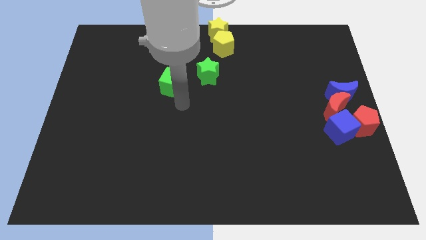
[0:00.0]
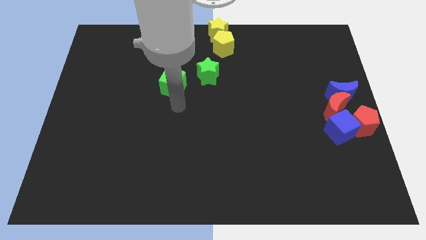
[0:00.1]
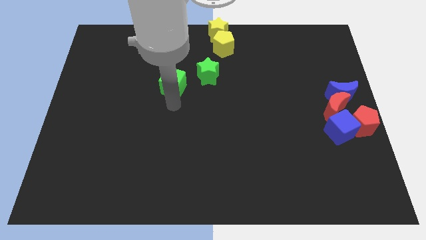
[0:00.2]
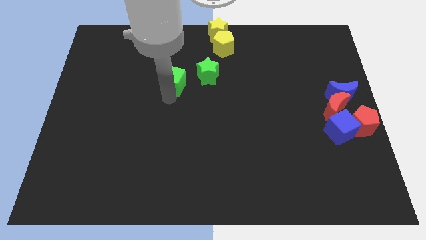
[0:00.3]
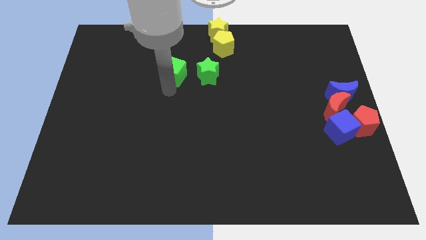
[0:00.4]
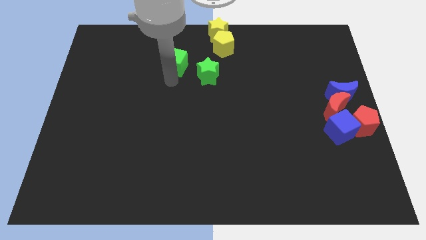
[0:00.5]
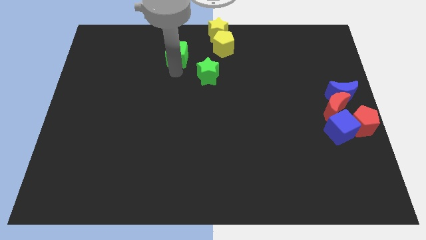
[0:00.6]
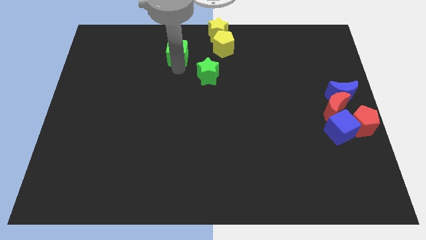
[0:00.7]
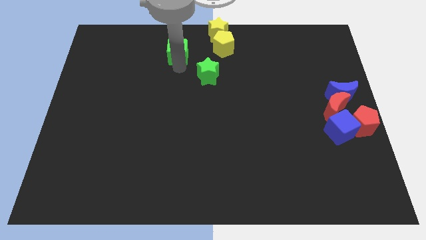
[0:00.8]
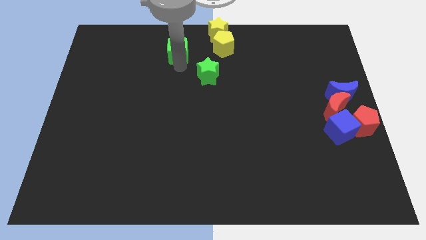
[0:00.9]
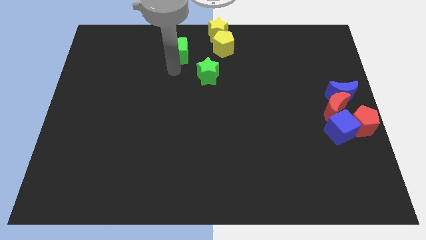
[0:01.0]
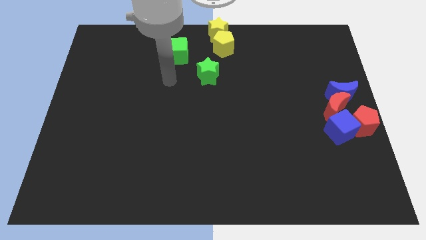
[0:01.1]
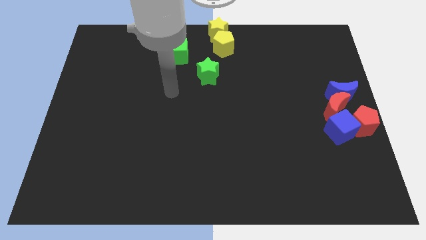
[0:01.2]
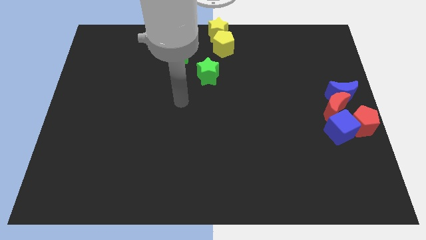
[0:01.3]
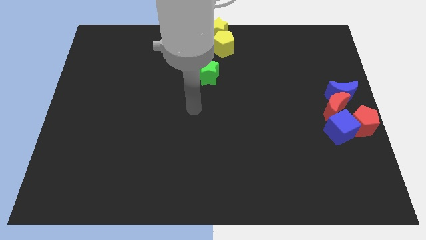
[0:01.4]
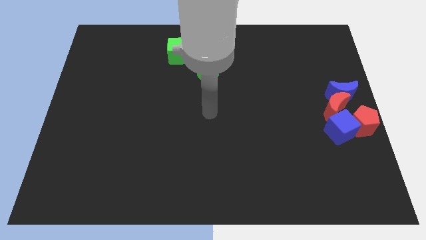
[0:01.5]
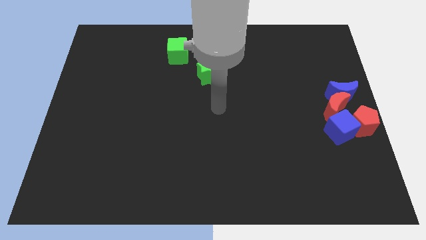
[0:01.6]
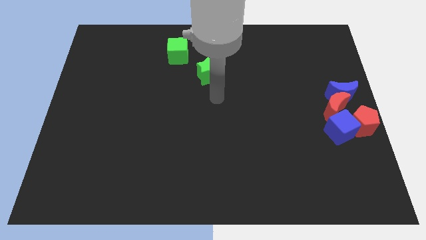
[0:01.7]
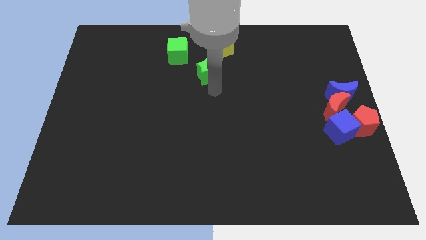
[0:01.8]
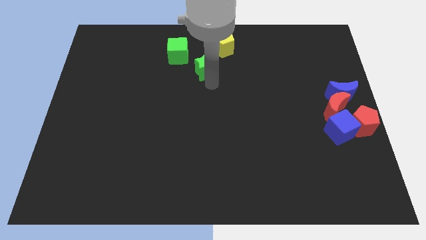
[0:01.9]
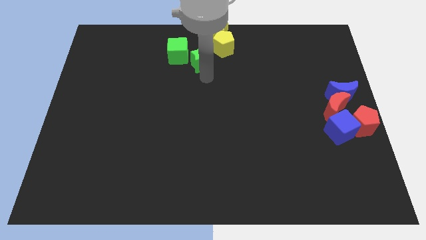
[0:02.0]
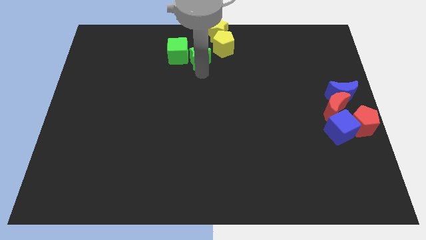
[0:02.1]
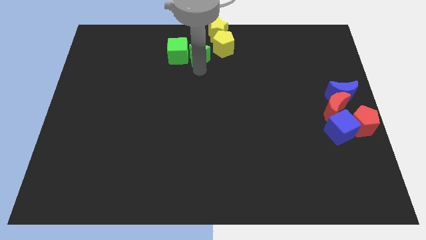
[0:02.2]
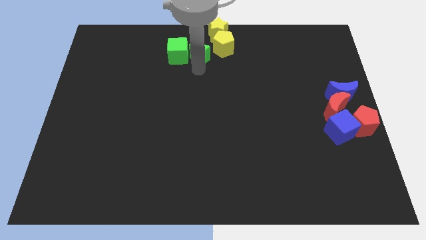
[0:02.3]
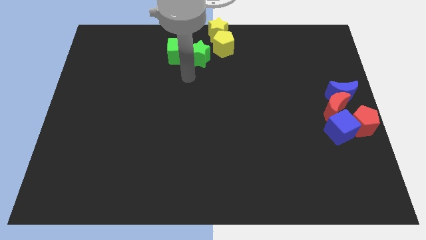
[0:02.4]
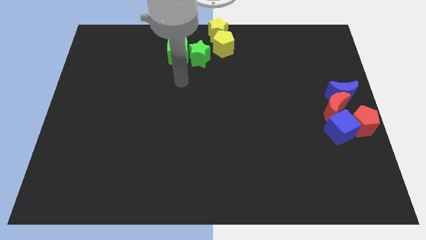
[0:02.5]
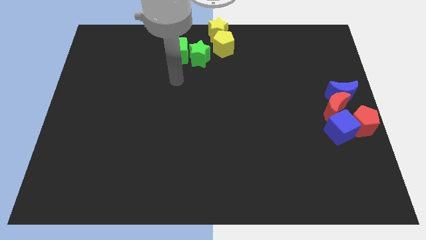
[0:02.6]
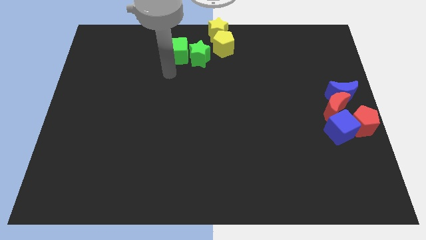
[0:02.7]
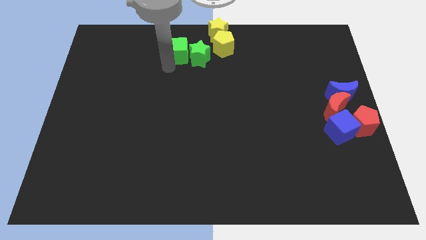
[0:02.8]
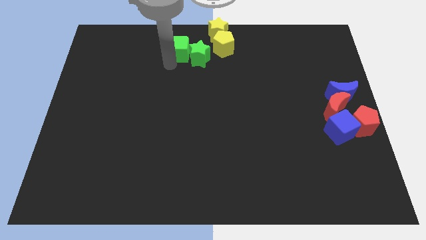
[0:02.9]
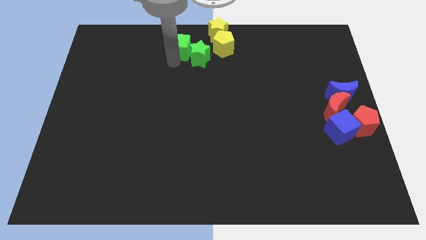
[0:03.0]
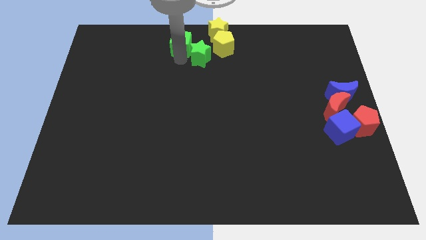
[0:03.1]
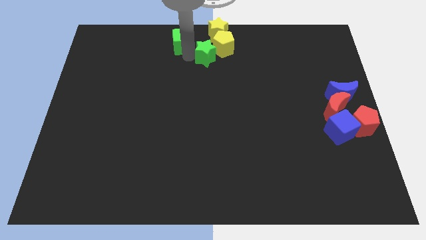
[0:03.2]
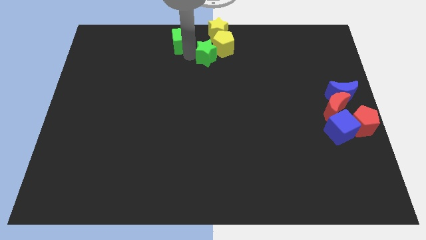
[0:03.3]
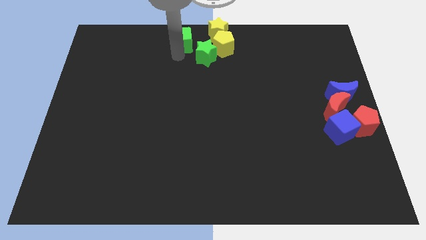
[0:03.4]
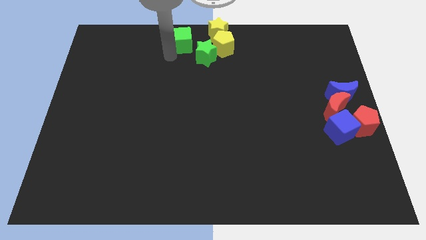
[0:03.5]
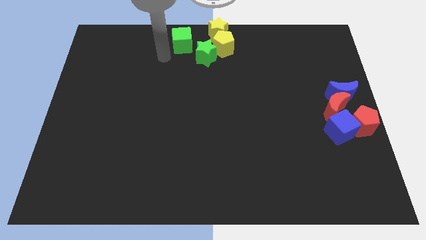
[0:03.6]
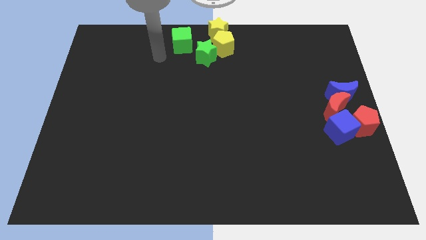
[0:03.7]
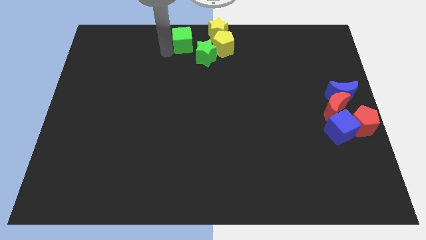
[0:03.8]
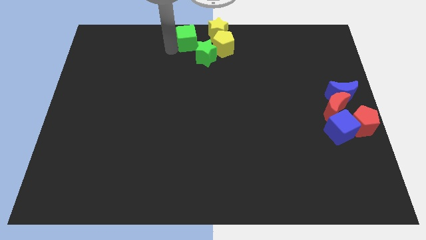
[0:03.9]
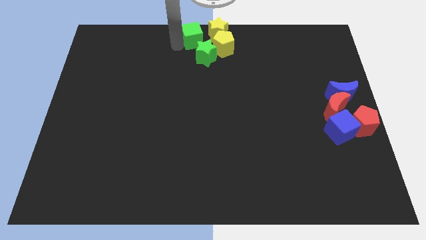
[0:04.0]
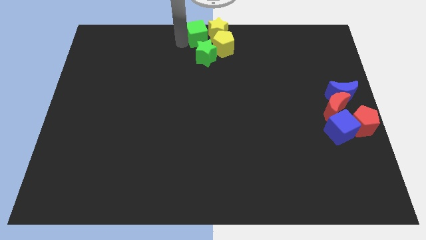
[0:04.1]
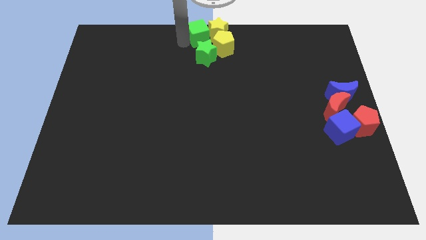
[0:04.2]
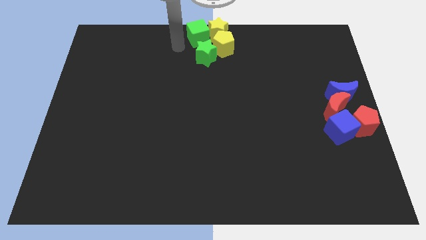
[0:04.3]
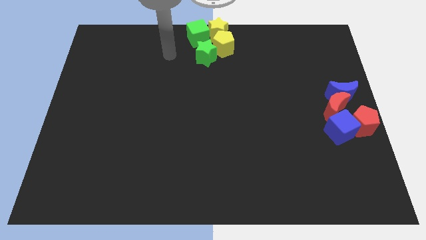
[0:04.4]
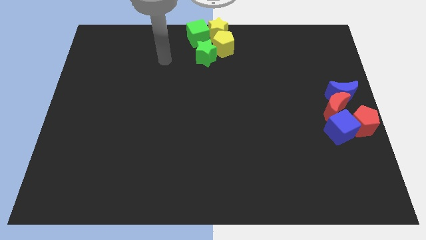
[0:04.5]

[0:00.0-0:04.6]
place the green cube left to the yellow star

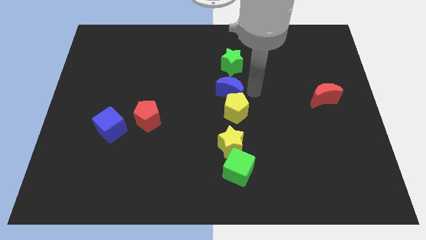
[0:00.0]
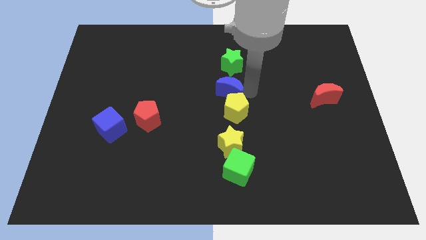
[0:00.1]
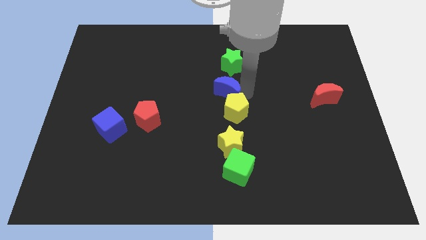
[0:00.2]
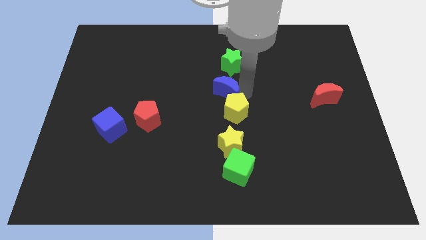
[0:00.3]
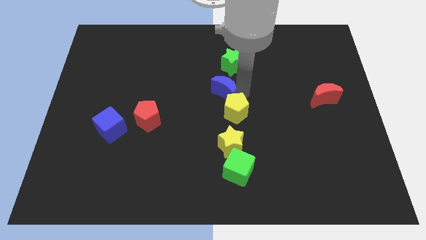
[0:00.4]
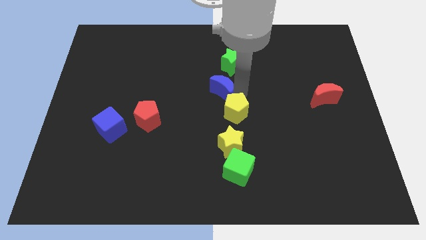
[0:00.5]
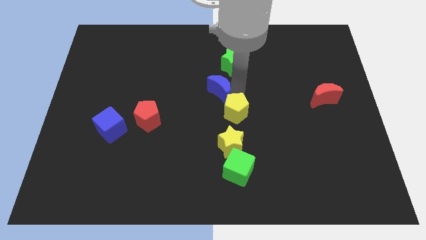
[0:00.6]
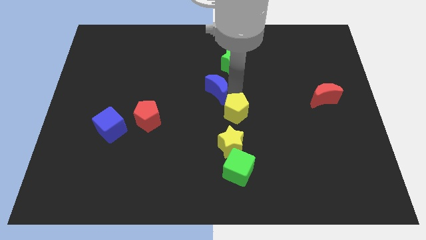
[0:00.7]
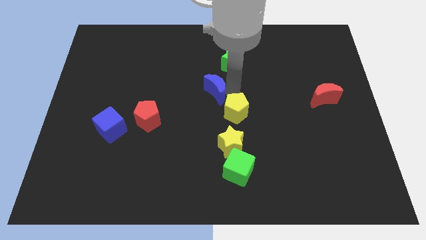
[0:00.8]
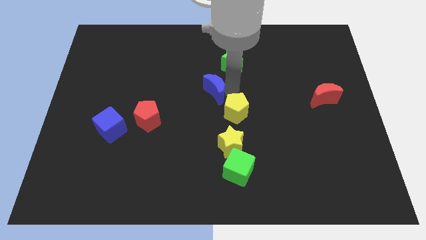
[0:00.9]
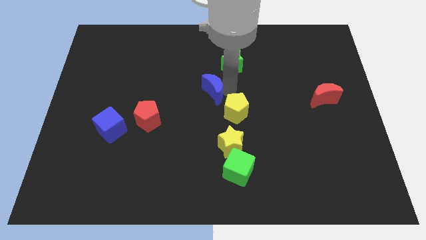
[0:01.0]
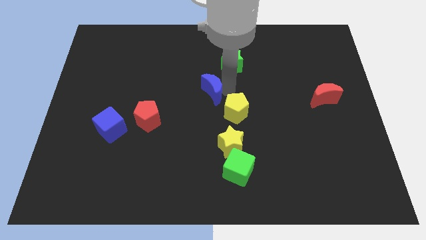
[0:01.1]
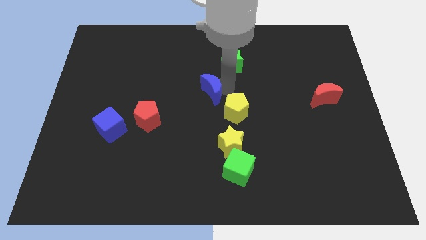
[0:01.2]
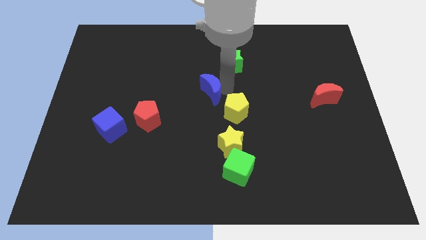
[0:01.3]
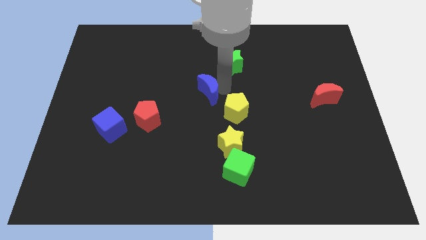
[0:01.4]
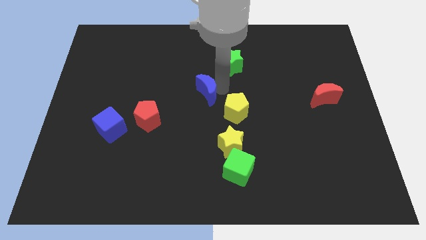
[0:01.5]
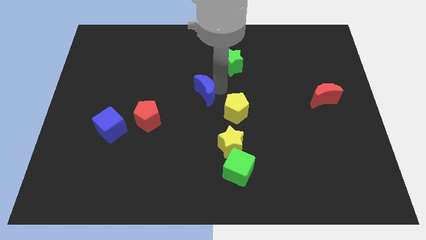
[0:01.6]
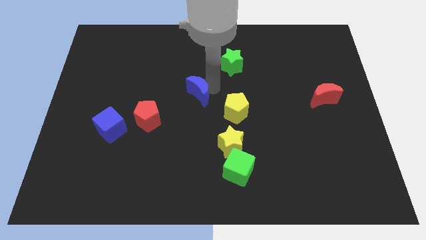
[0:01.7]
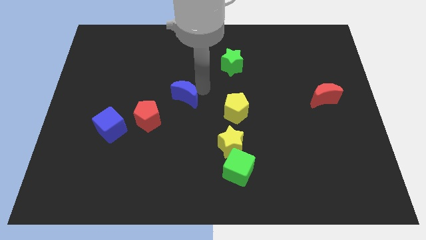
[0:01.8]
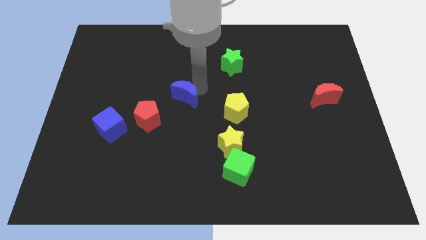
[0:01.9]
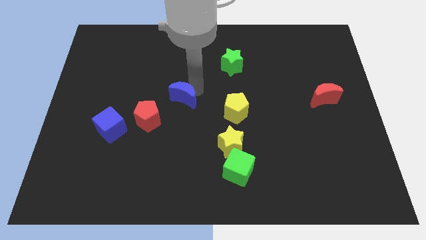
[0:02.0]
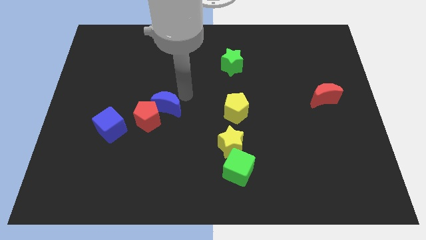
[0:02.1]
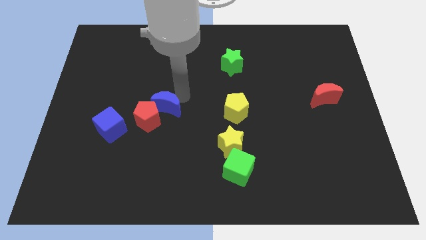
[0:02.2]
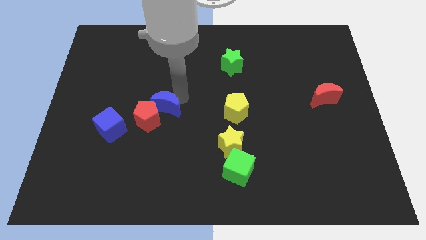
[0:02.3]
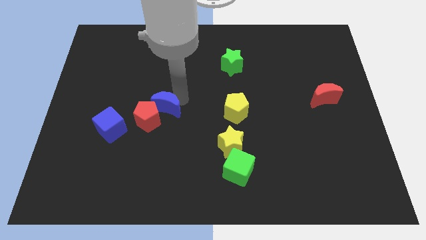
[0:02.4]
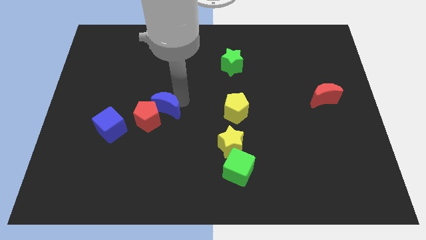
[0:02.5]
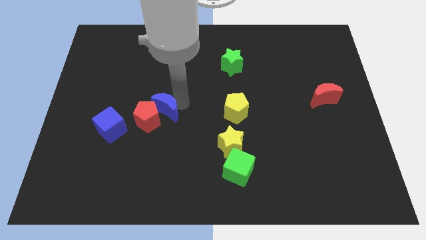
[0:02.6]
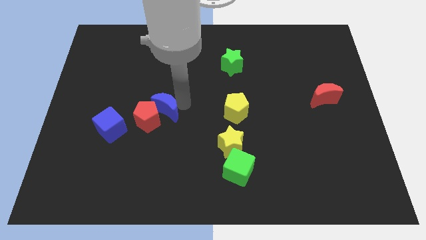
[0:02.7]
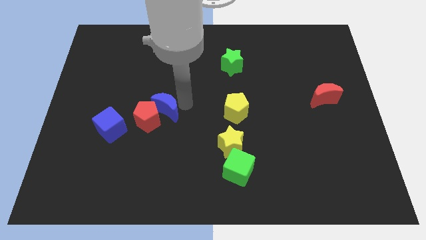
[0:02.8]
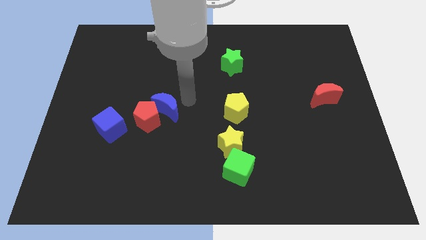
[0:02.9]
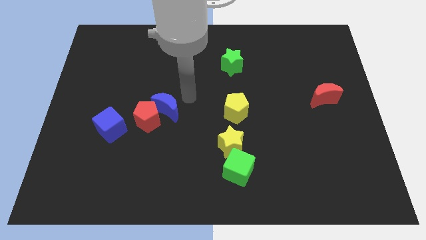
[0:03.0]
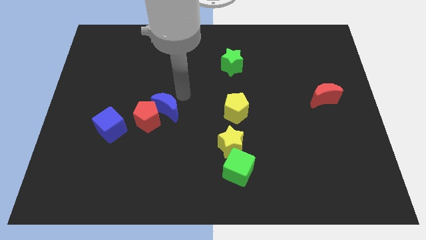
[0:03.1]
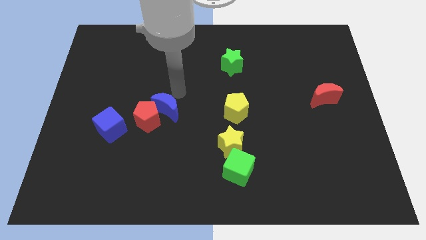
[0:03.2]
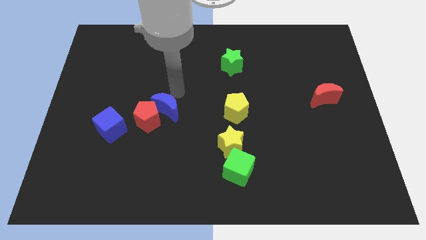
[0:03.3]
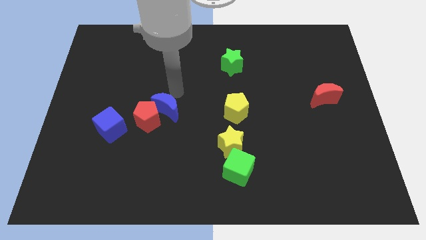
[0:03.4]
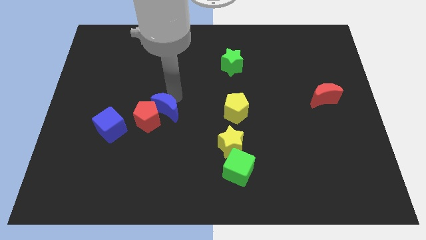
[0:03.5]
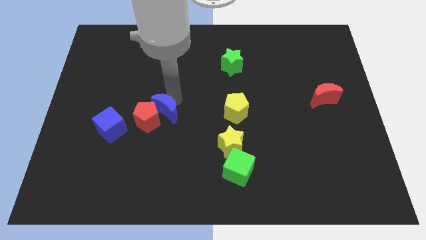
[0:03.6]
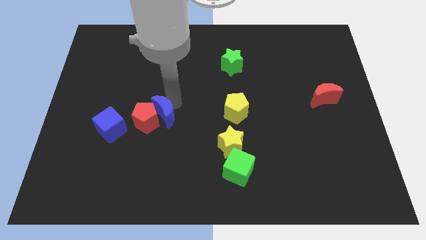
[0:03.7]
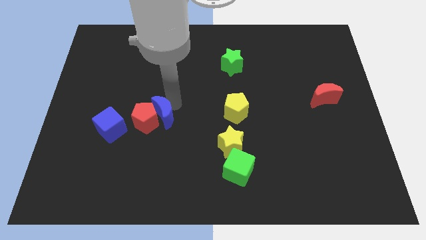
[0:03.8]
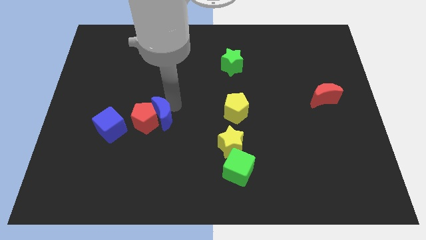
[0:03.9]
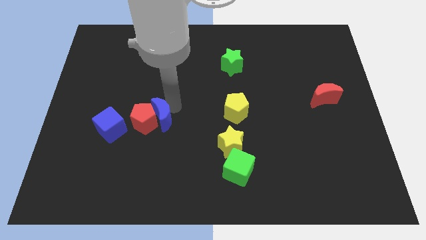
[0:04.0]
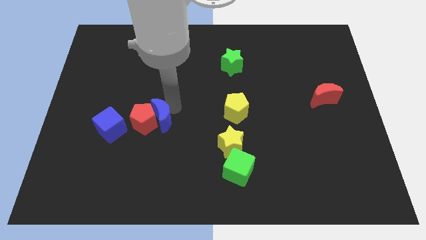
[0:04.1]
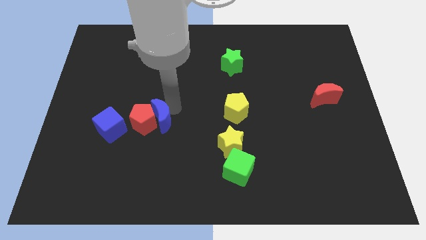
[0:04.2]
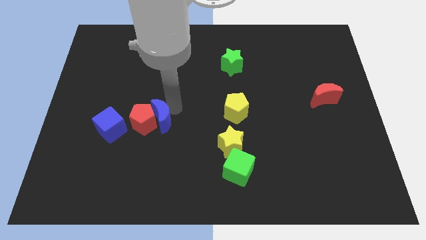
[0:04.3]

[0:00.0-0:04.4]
slide the blue crescent to the right side of the red pentagon
